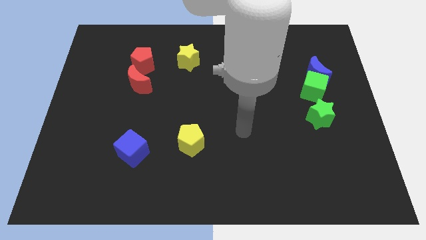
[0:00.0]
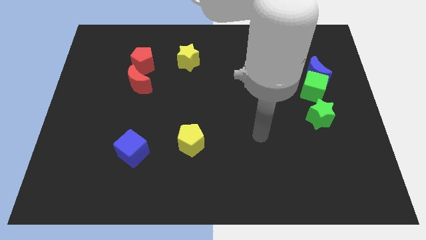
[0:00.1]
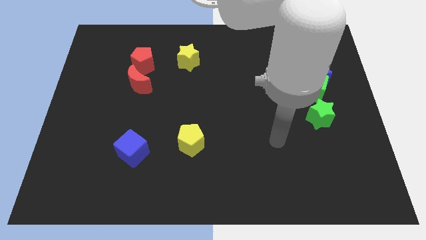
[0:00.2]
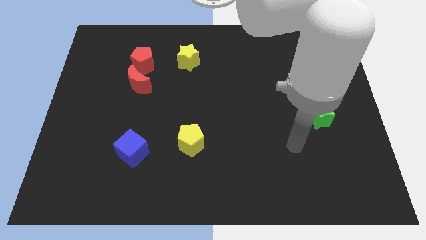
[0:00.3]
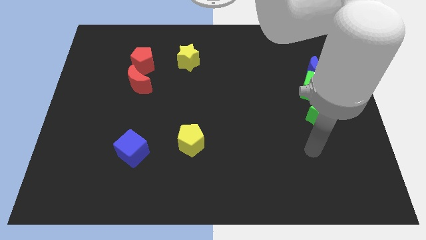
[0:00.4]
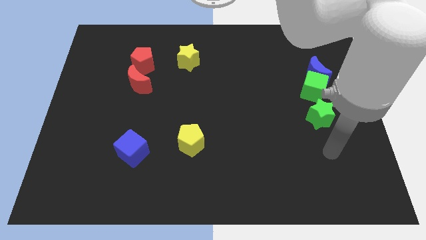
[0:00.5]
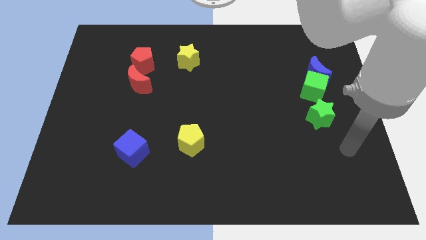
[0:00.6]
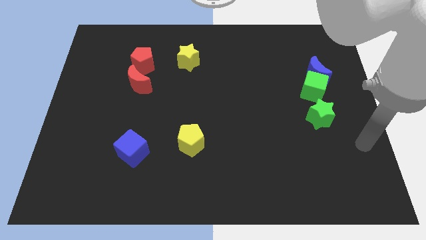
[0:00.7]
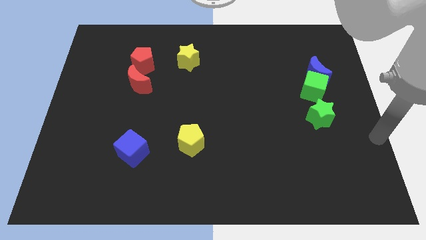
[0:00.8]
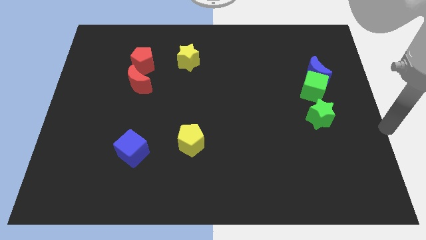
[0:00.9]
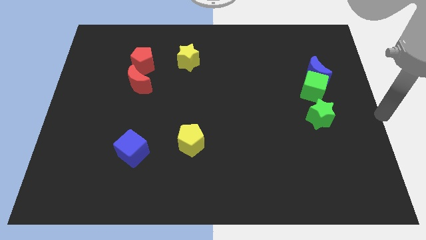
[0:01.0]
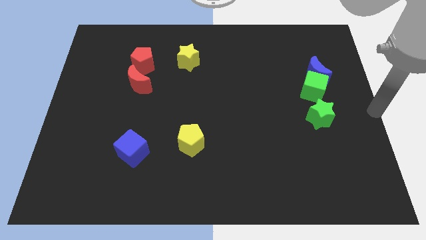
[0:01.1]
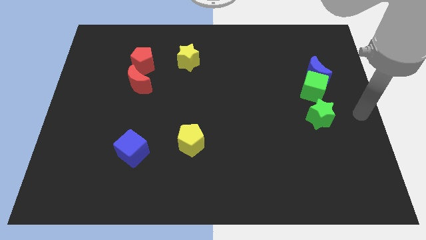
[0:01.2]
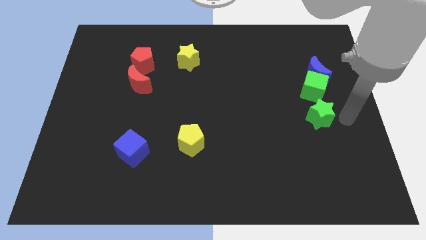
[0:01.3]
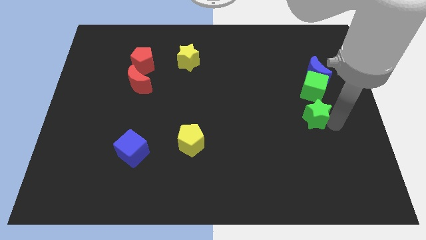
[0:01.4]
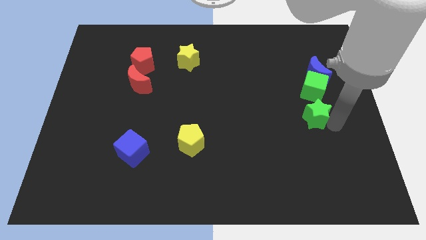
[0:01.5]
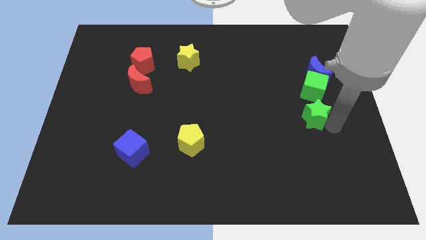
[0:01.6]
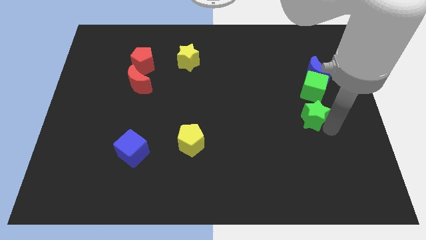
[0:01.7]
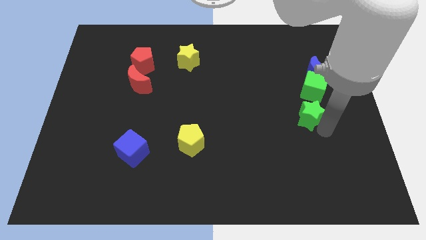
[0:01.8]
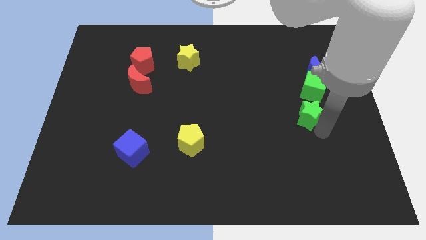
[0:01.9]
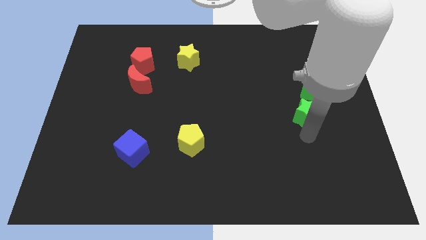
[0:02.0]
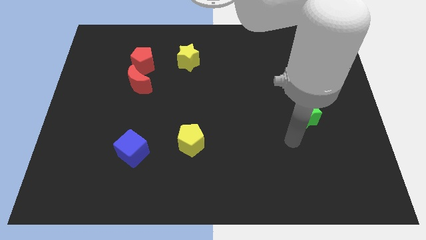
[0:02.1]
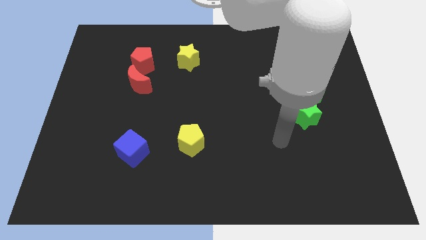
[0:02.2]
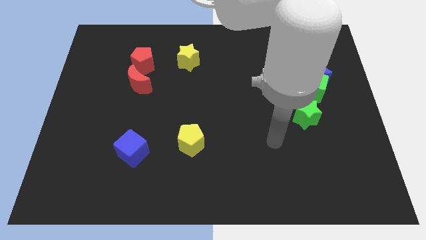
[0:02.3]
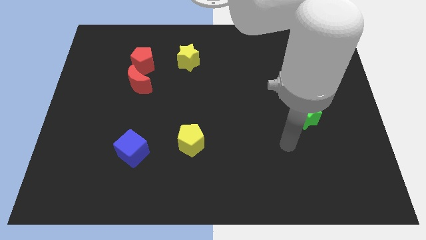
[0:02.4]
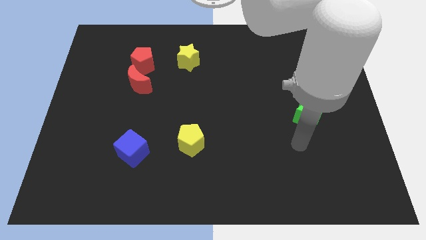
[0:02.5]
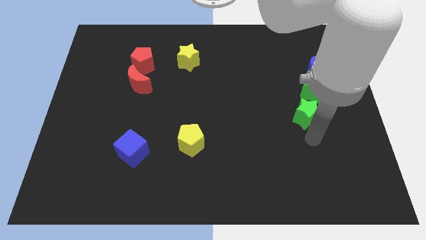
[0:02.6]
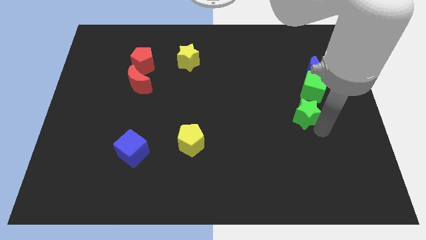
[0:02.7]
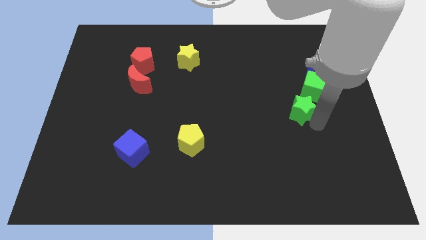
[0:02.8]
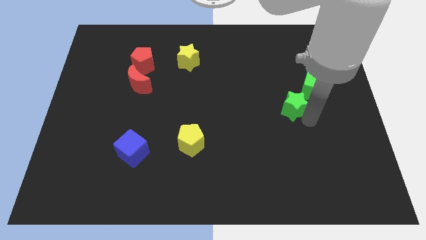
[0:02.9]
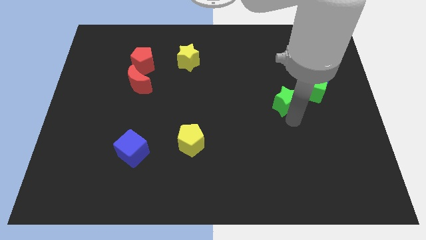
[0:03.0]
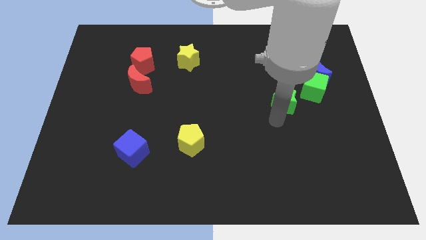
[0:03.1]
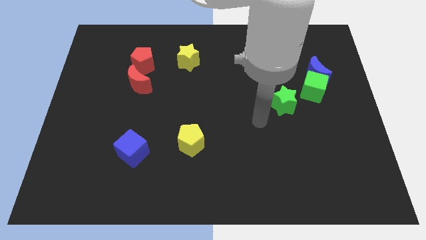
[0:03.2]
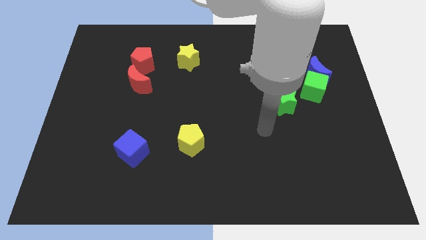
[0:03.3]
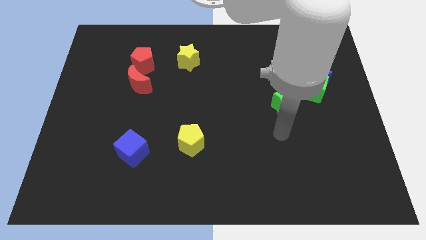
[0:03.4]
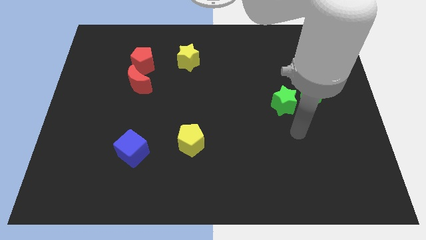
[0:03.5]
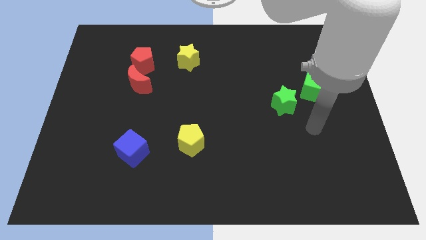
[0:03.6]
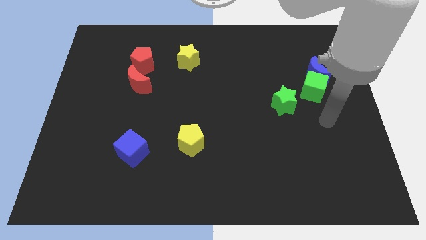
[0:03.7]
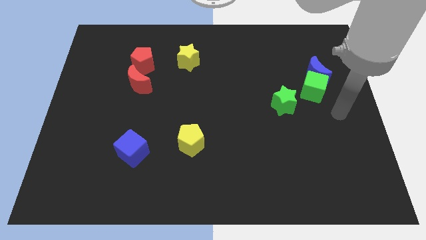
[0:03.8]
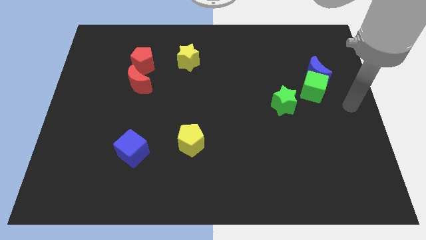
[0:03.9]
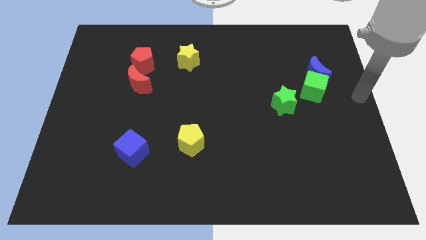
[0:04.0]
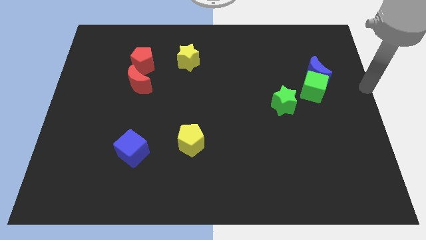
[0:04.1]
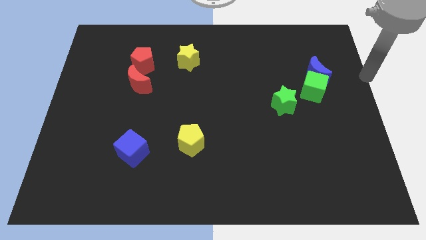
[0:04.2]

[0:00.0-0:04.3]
move the green star to the bottom left side of the green cube

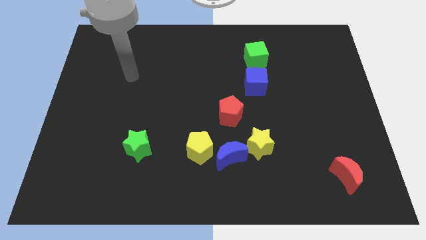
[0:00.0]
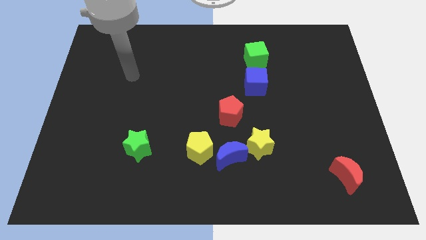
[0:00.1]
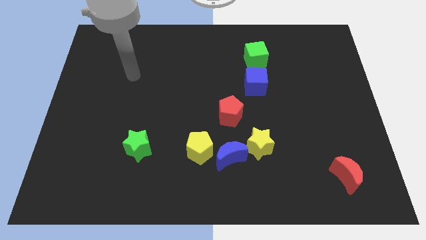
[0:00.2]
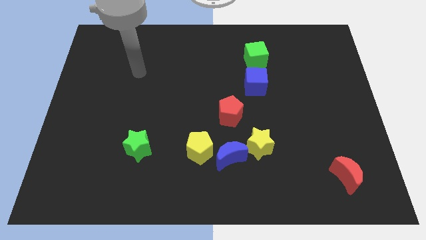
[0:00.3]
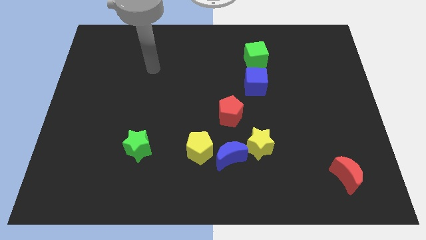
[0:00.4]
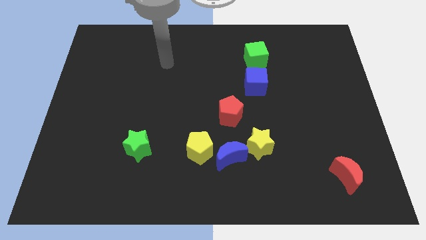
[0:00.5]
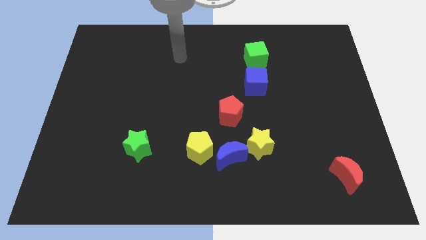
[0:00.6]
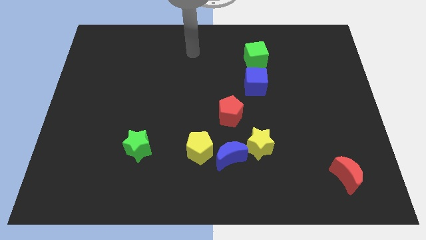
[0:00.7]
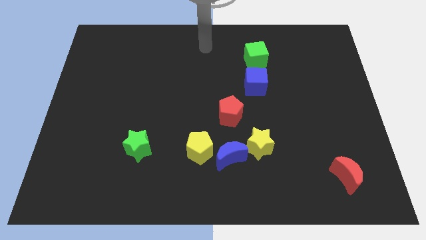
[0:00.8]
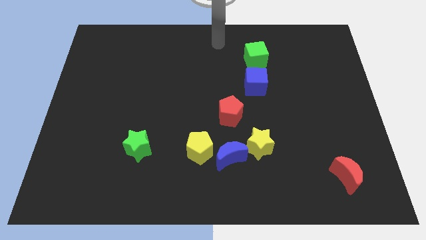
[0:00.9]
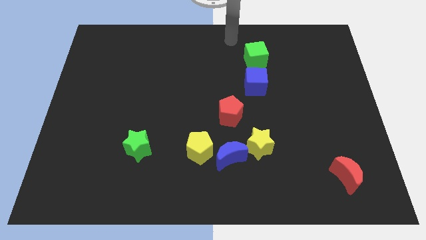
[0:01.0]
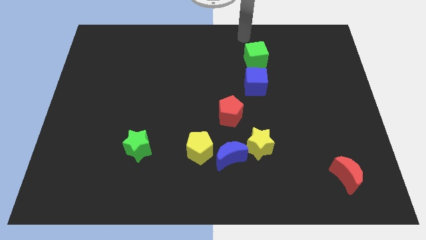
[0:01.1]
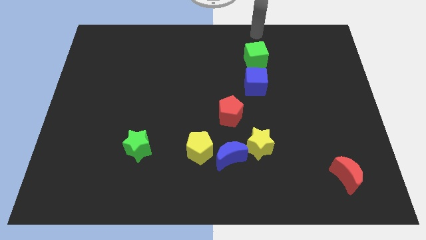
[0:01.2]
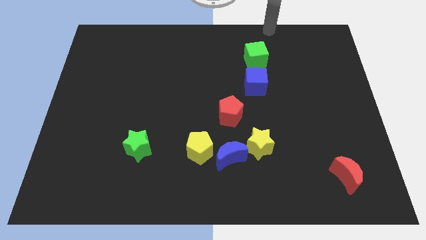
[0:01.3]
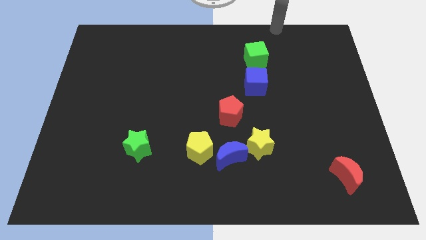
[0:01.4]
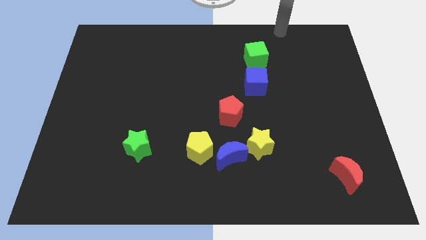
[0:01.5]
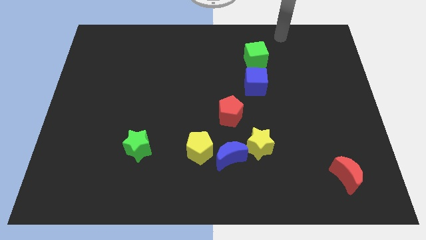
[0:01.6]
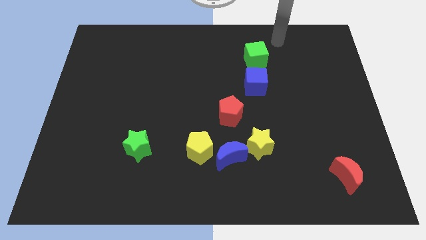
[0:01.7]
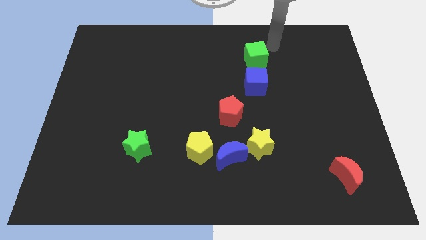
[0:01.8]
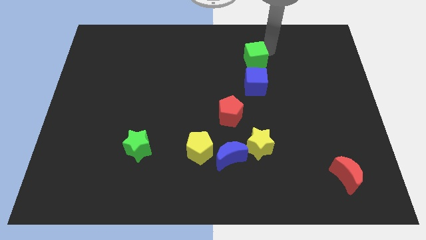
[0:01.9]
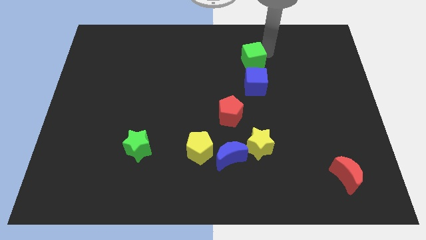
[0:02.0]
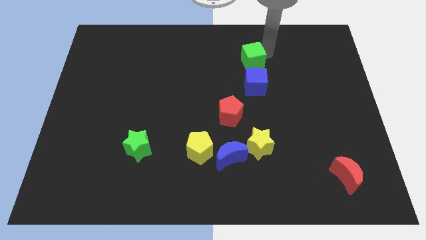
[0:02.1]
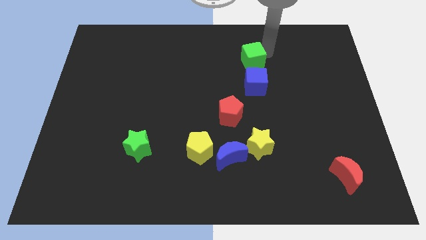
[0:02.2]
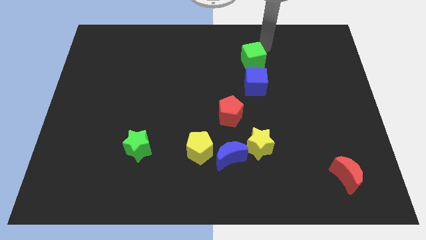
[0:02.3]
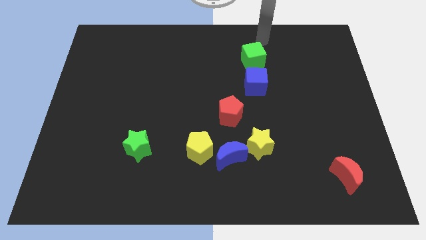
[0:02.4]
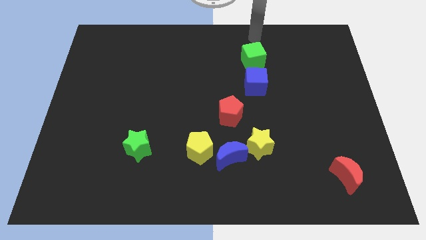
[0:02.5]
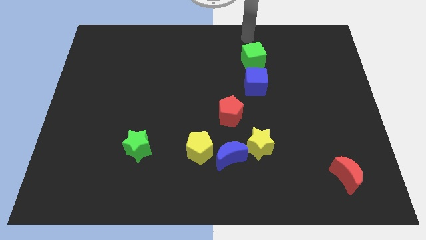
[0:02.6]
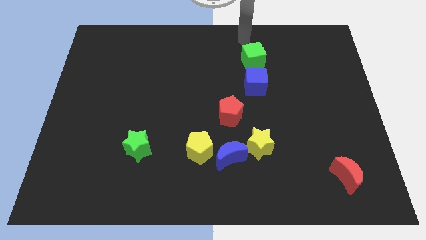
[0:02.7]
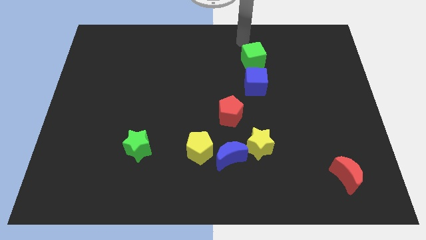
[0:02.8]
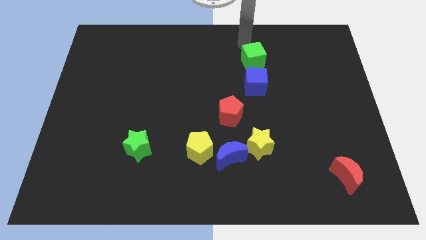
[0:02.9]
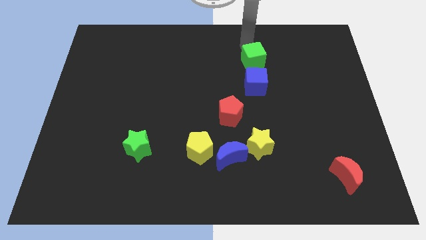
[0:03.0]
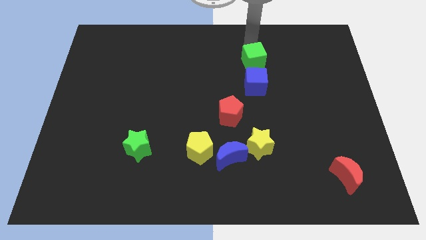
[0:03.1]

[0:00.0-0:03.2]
touch the green cube at the top side

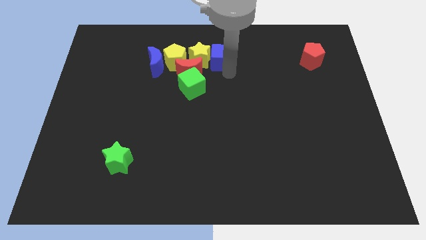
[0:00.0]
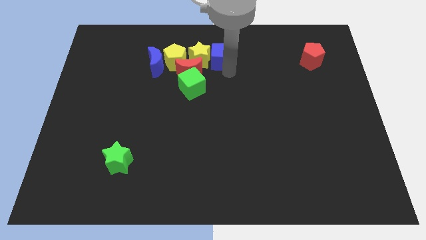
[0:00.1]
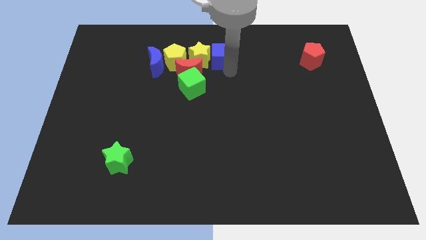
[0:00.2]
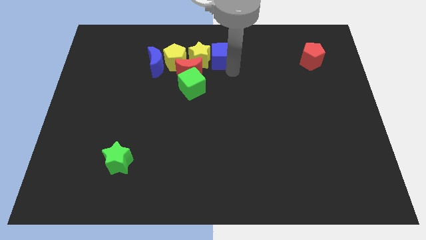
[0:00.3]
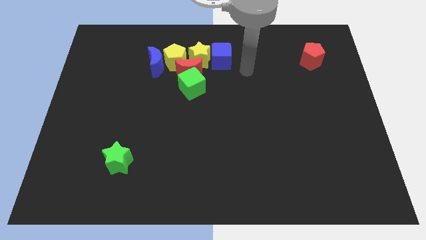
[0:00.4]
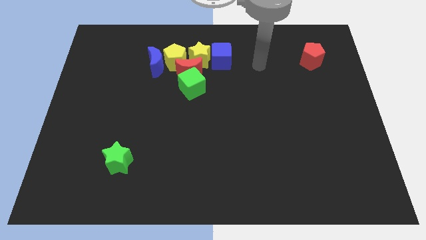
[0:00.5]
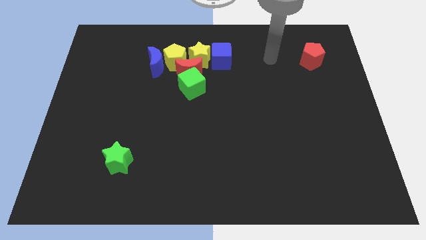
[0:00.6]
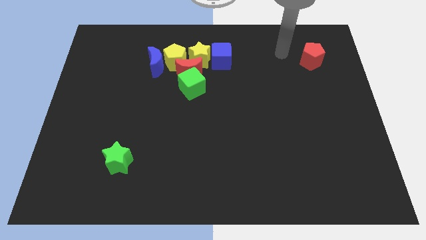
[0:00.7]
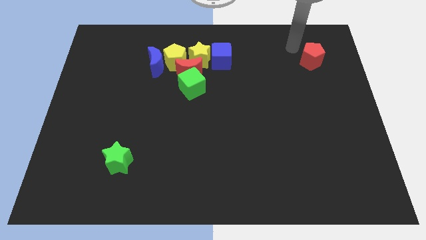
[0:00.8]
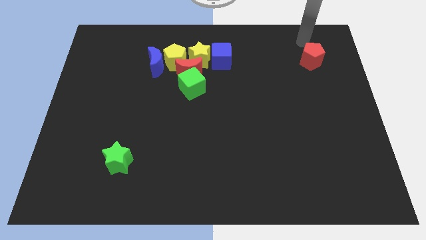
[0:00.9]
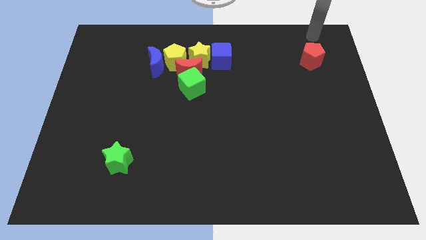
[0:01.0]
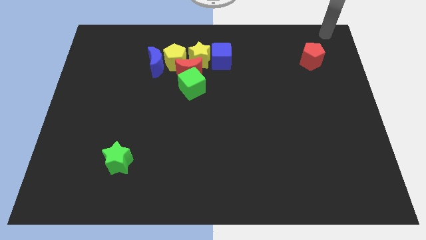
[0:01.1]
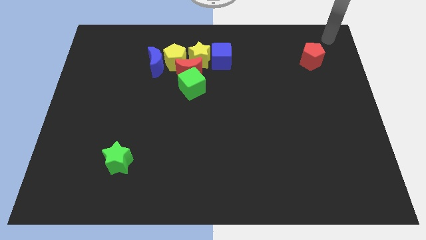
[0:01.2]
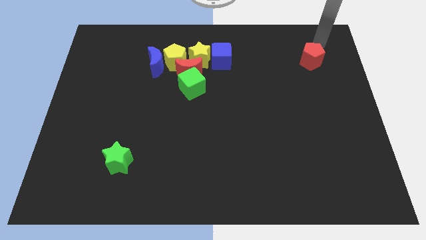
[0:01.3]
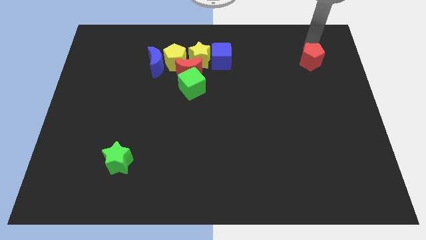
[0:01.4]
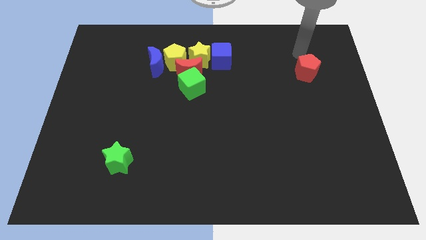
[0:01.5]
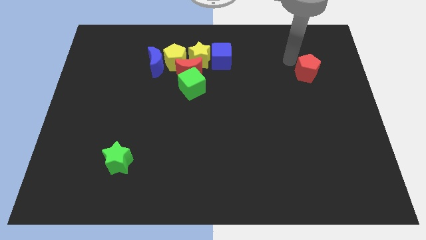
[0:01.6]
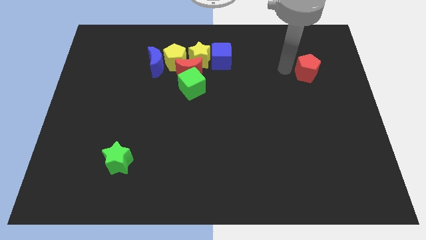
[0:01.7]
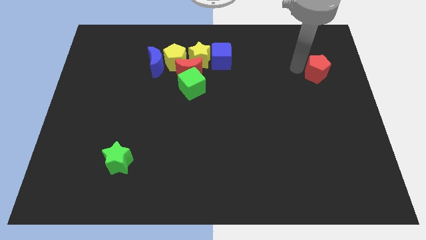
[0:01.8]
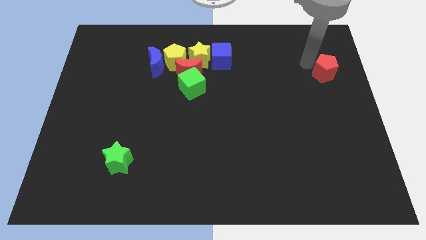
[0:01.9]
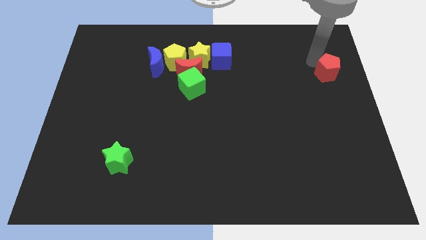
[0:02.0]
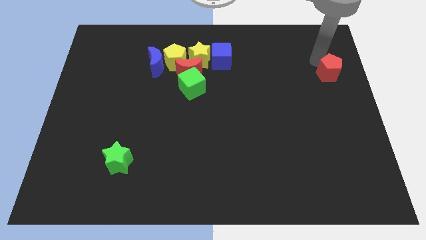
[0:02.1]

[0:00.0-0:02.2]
move your arm close to the red pentagon
